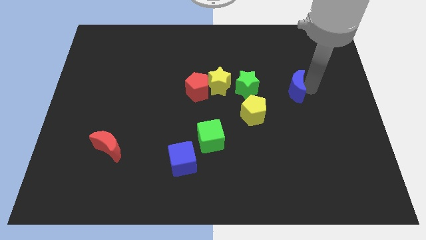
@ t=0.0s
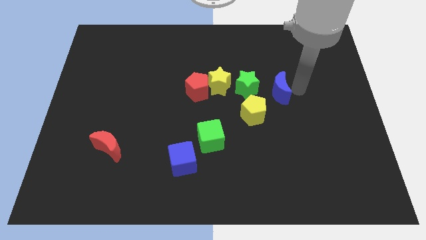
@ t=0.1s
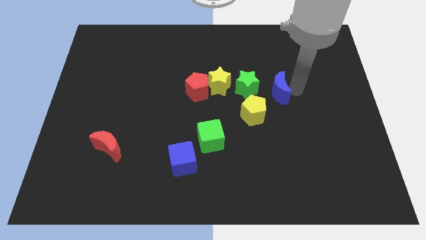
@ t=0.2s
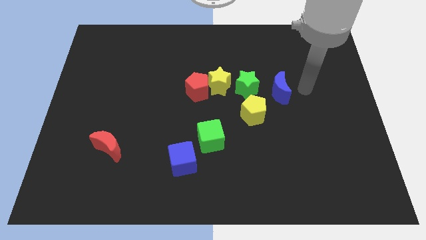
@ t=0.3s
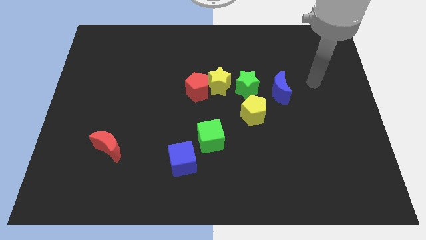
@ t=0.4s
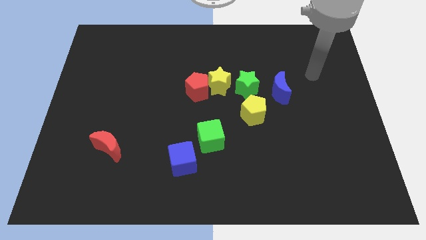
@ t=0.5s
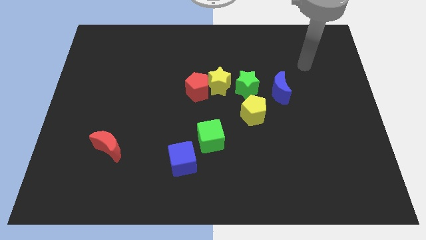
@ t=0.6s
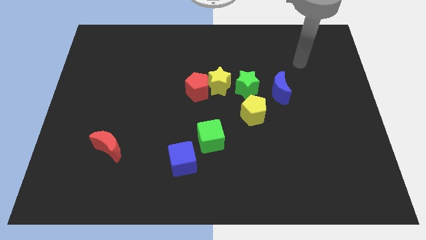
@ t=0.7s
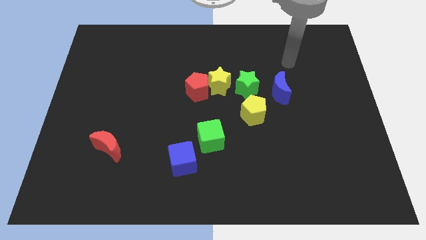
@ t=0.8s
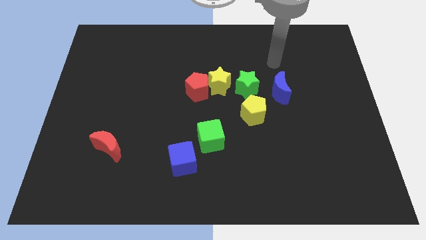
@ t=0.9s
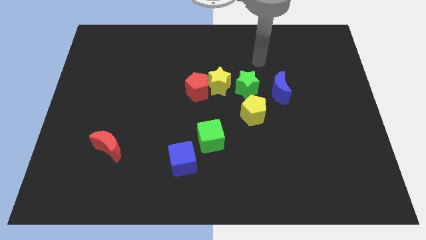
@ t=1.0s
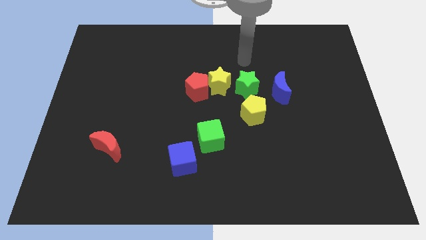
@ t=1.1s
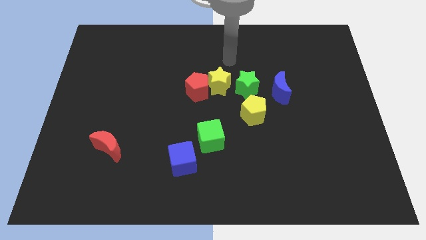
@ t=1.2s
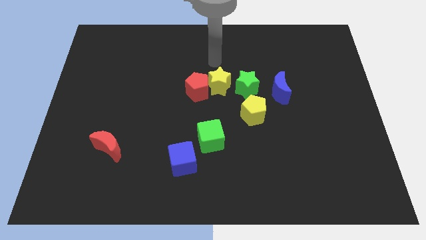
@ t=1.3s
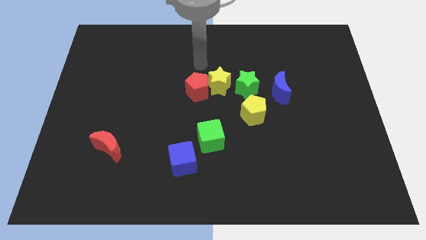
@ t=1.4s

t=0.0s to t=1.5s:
push the blue crescent slightly to the left

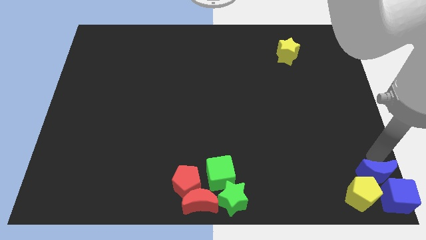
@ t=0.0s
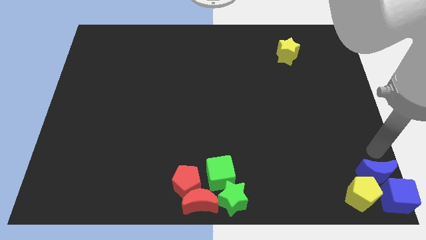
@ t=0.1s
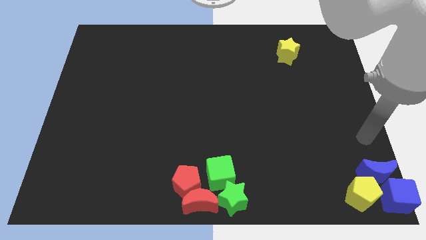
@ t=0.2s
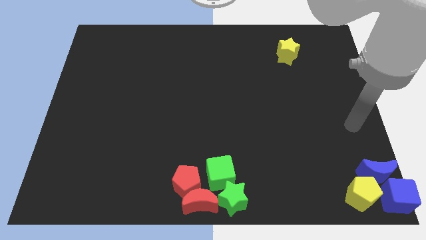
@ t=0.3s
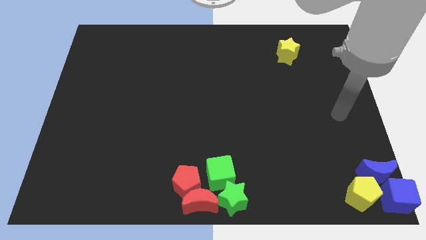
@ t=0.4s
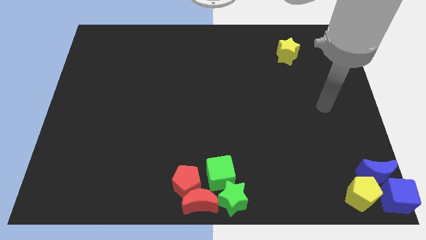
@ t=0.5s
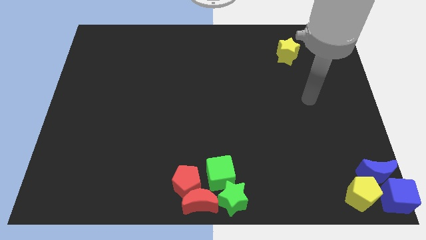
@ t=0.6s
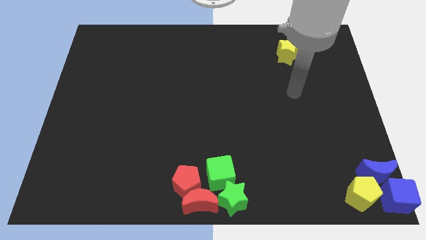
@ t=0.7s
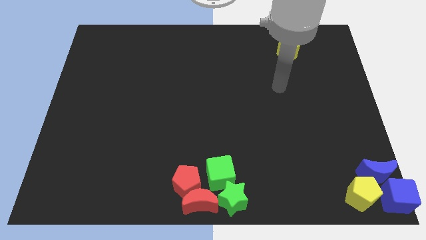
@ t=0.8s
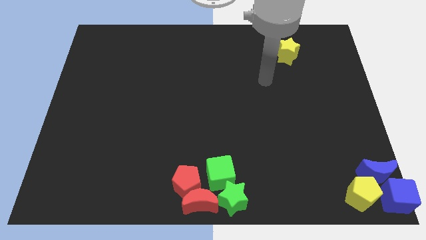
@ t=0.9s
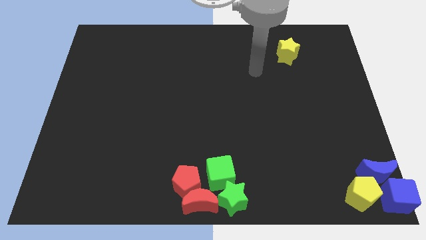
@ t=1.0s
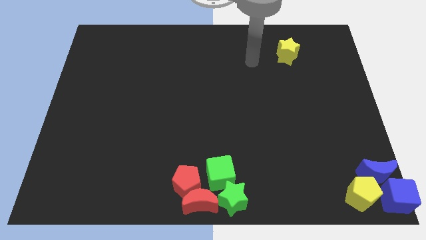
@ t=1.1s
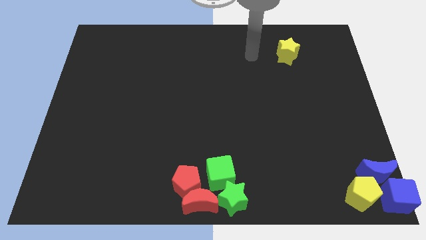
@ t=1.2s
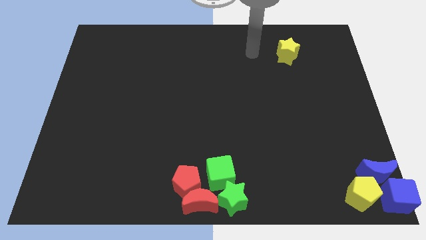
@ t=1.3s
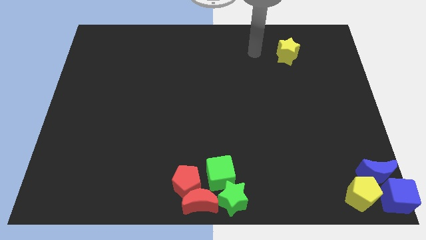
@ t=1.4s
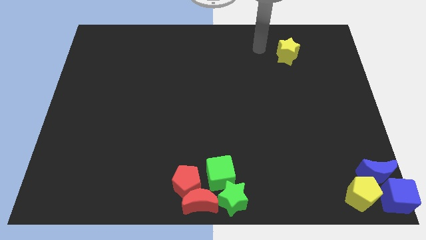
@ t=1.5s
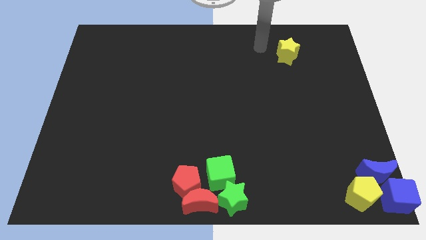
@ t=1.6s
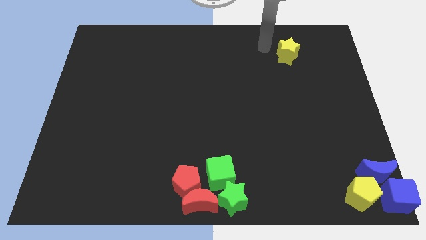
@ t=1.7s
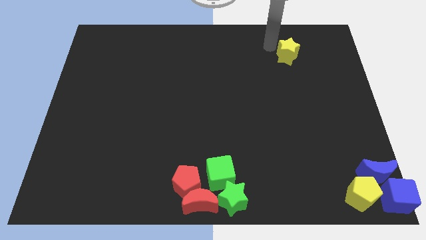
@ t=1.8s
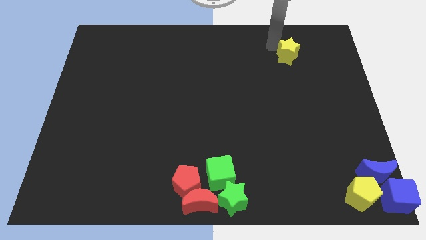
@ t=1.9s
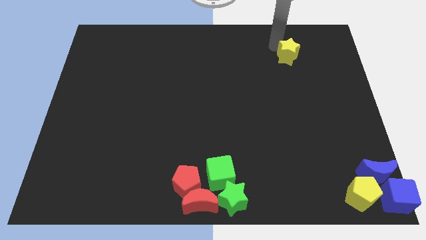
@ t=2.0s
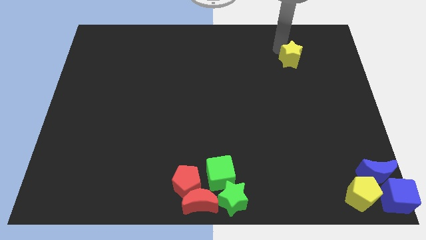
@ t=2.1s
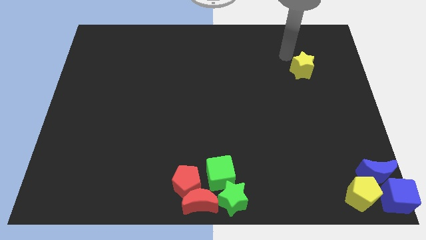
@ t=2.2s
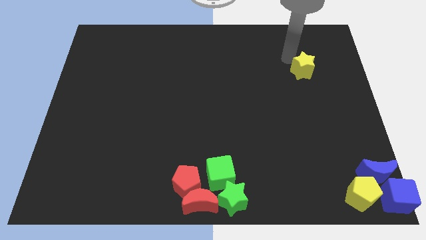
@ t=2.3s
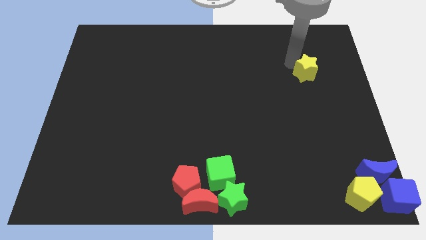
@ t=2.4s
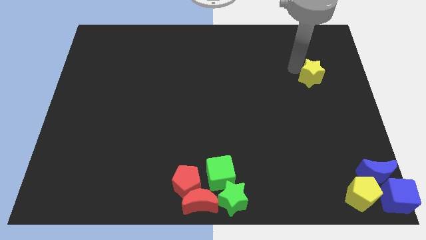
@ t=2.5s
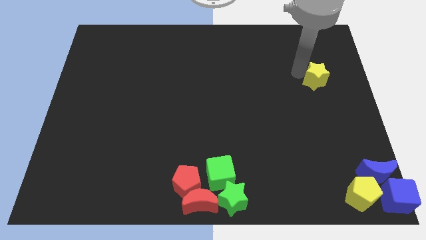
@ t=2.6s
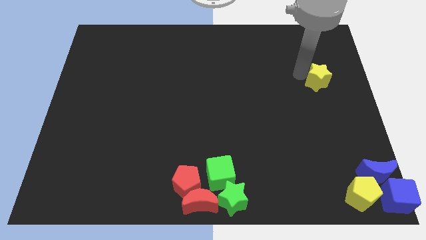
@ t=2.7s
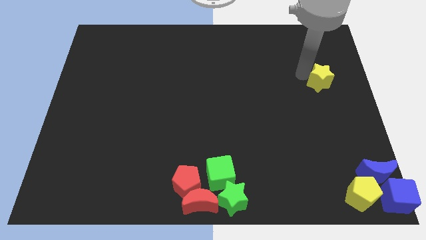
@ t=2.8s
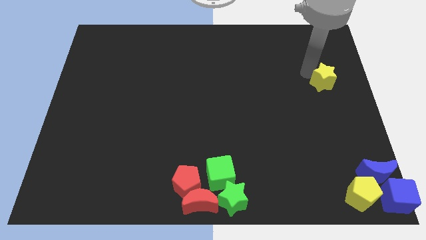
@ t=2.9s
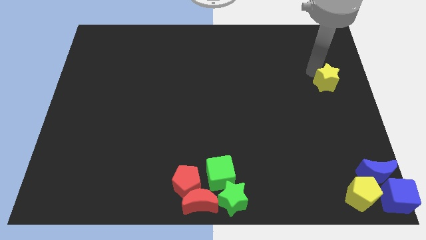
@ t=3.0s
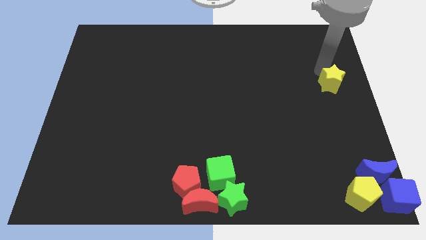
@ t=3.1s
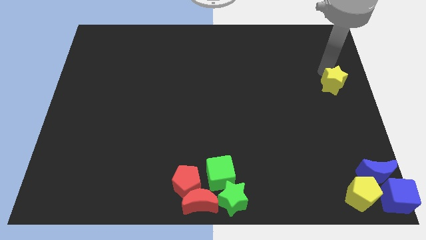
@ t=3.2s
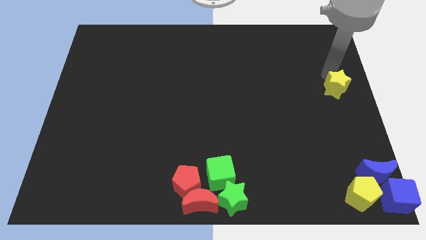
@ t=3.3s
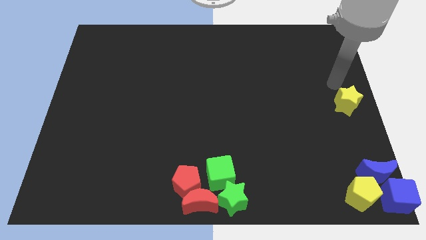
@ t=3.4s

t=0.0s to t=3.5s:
slide the yellow star to the right center of the board

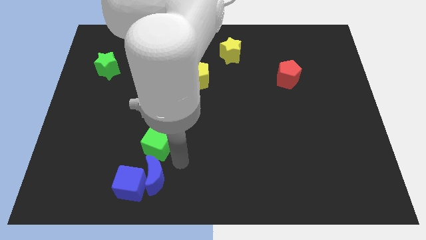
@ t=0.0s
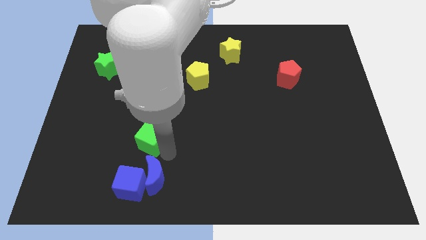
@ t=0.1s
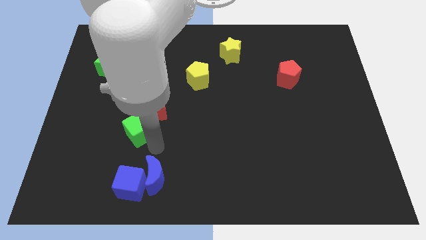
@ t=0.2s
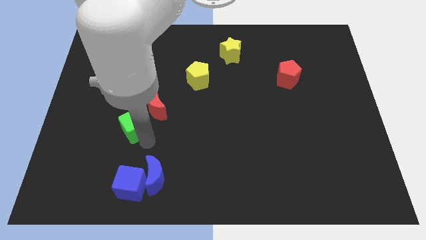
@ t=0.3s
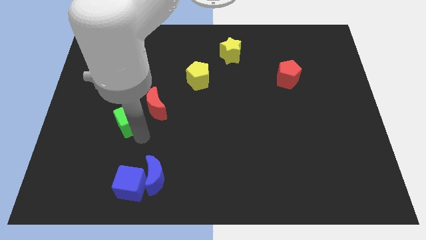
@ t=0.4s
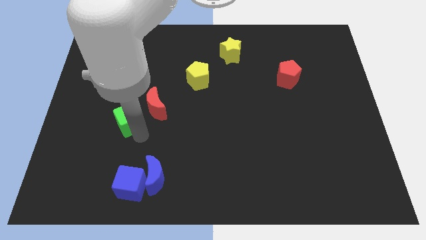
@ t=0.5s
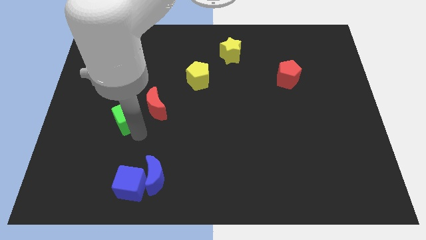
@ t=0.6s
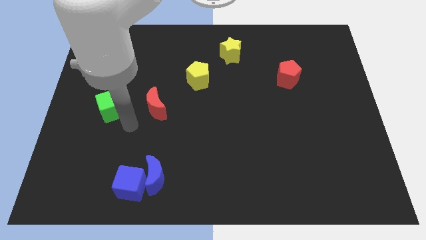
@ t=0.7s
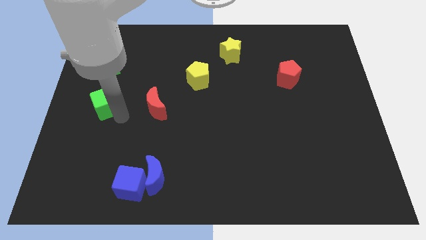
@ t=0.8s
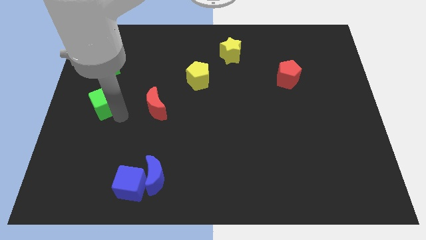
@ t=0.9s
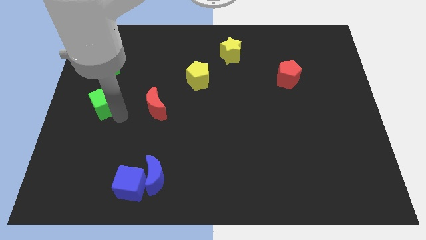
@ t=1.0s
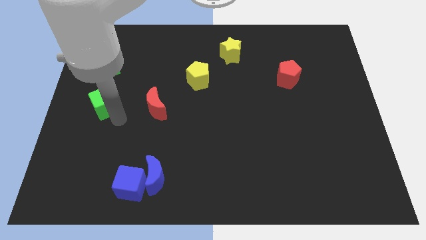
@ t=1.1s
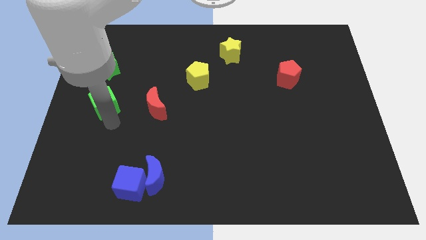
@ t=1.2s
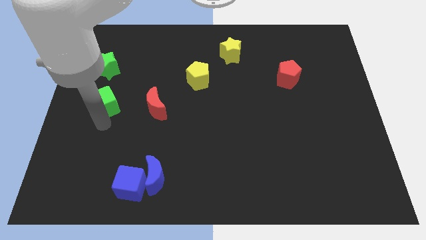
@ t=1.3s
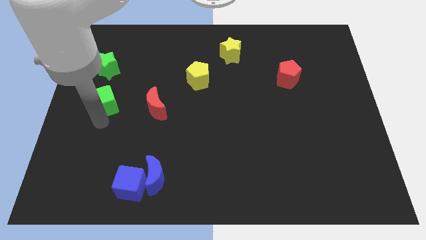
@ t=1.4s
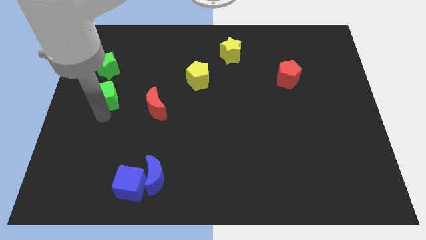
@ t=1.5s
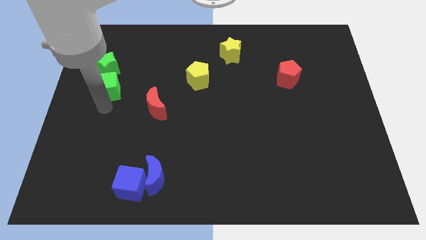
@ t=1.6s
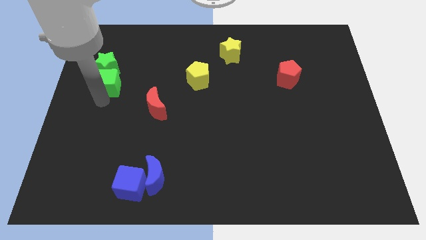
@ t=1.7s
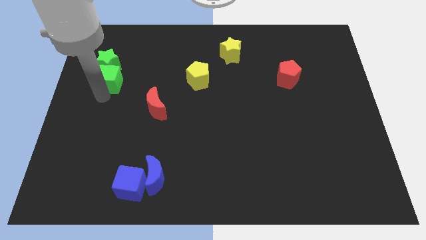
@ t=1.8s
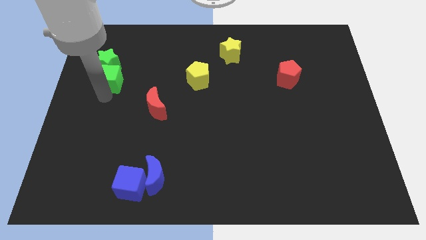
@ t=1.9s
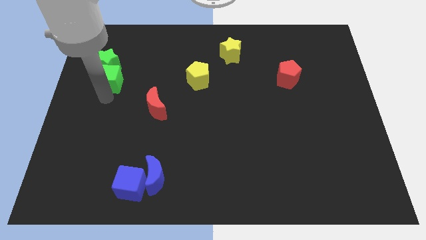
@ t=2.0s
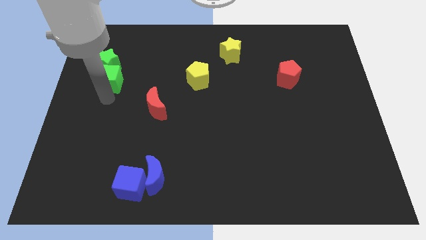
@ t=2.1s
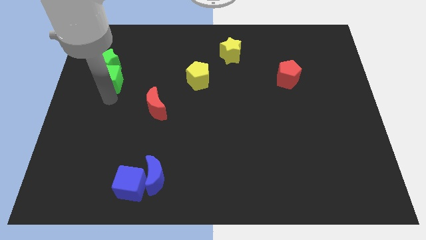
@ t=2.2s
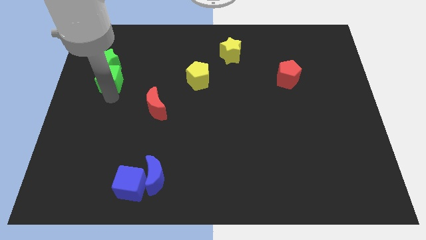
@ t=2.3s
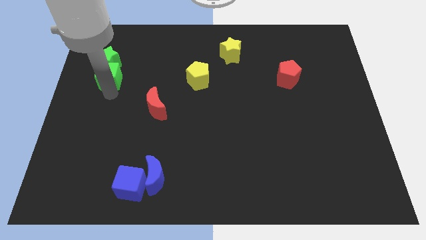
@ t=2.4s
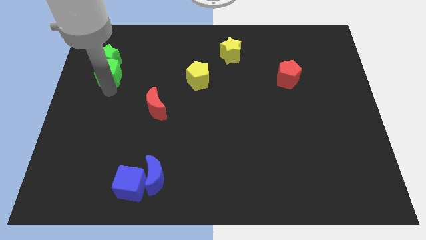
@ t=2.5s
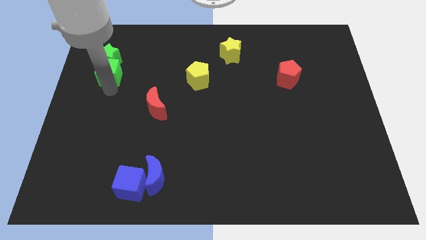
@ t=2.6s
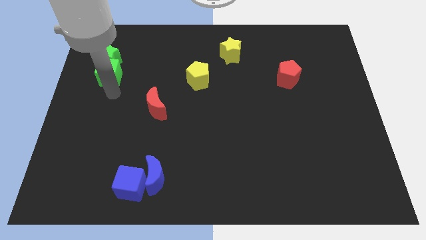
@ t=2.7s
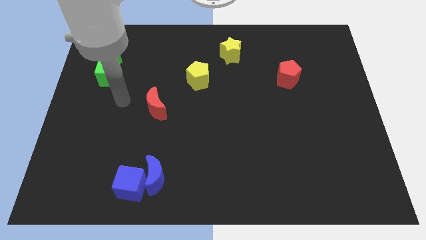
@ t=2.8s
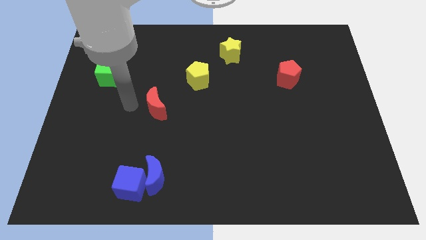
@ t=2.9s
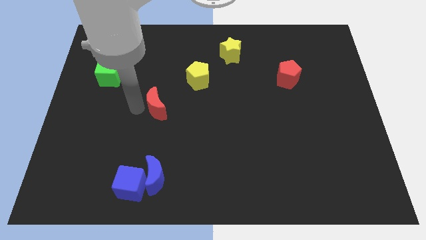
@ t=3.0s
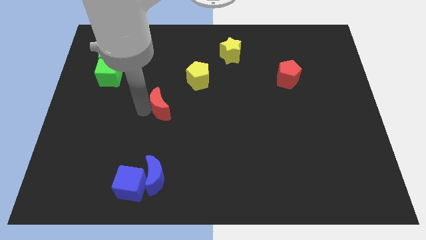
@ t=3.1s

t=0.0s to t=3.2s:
bring the green cube at the bottom side of the green star

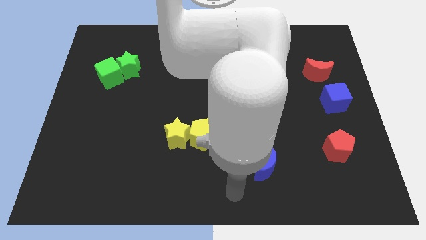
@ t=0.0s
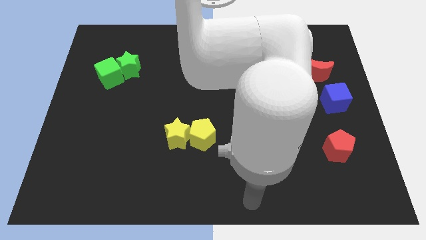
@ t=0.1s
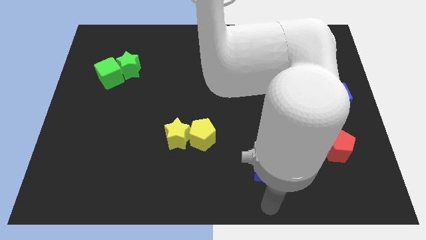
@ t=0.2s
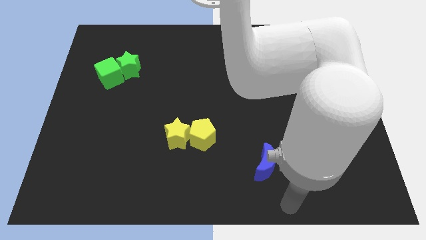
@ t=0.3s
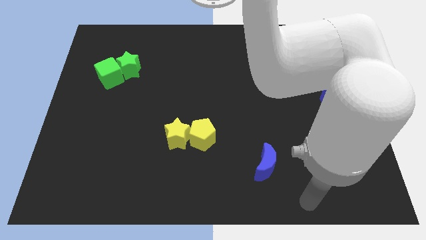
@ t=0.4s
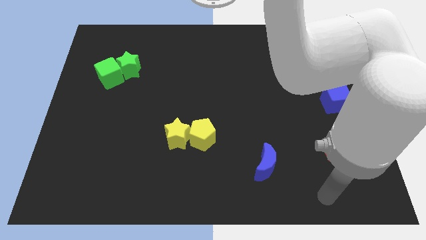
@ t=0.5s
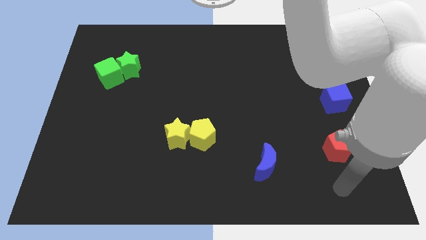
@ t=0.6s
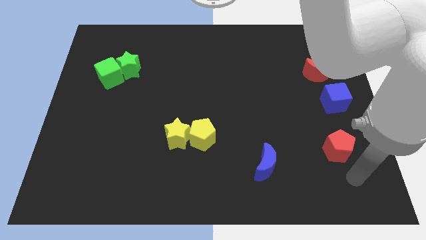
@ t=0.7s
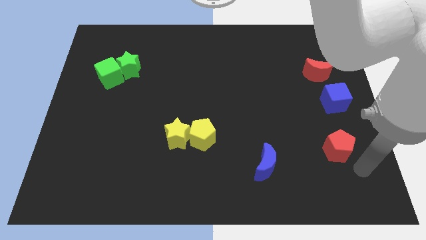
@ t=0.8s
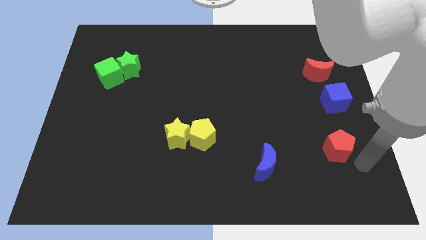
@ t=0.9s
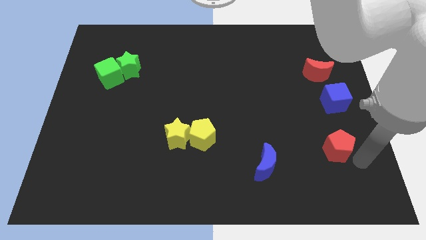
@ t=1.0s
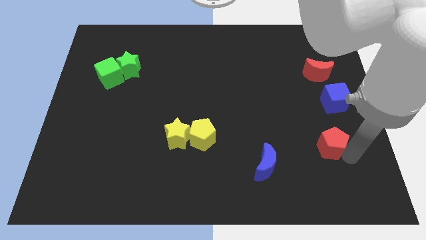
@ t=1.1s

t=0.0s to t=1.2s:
move your arm towards the bottom right of the red pentagon
